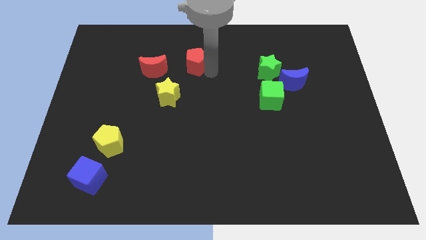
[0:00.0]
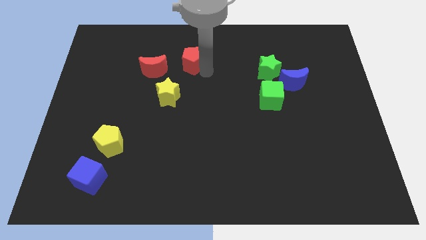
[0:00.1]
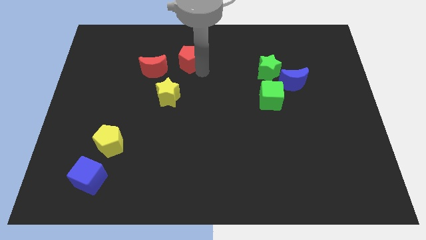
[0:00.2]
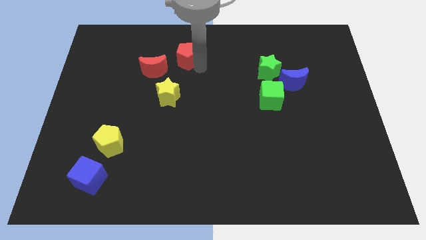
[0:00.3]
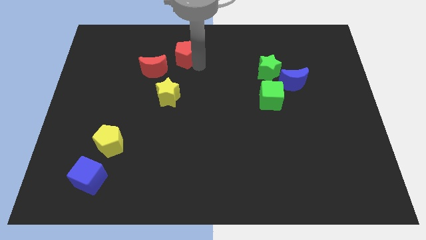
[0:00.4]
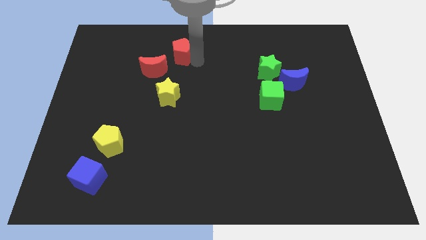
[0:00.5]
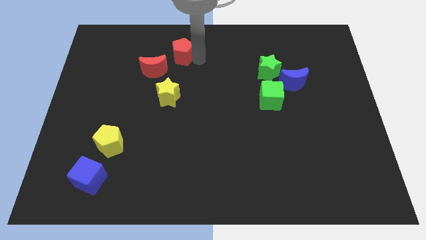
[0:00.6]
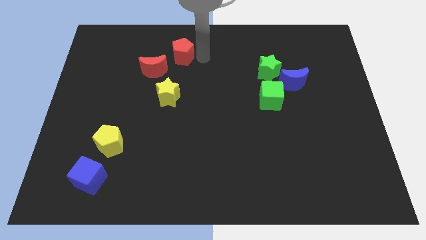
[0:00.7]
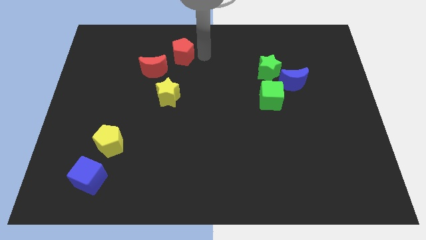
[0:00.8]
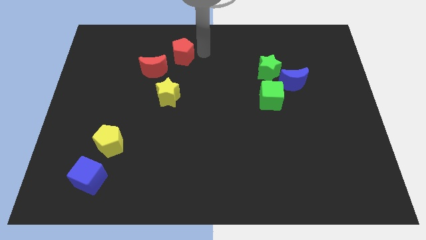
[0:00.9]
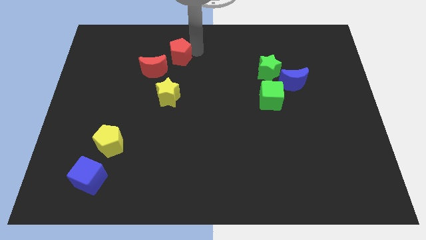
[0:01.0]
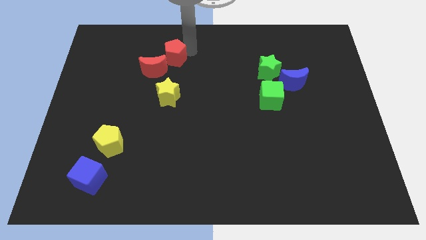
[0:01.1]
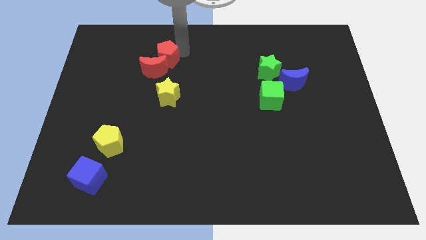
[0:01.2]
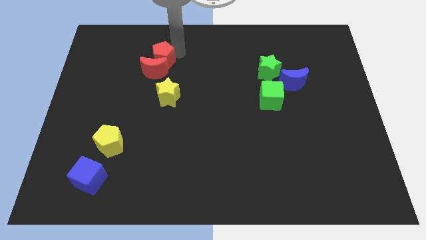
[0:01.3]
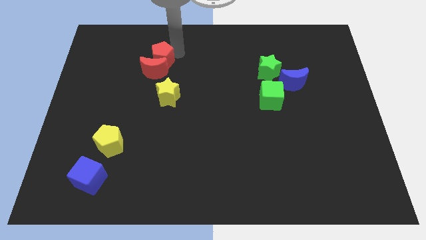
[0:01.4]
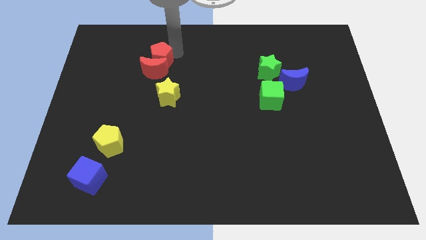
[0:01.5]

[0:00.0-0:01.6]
move the red pentagon into the red moon

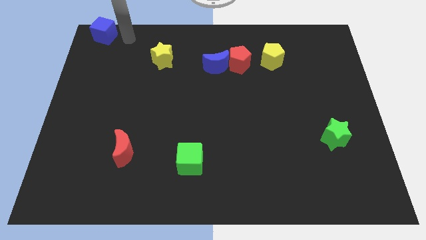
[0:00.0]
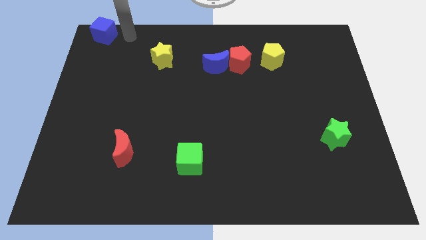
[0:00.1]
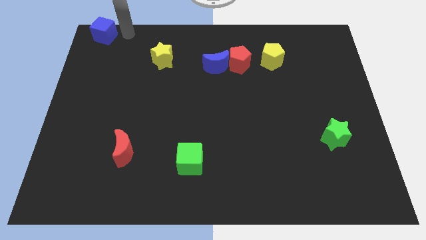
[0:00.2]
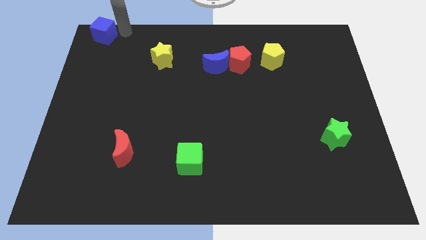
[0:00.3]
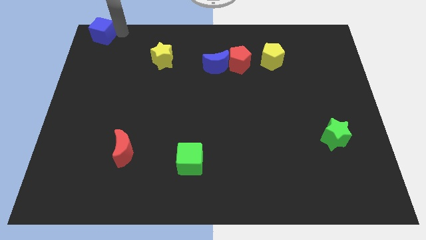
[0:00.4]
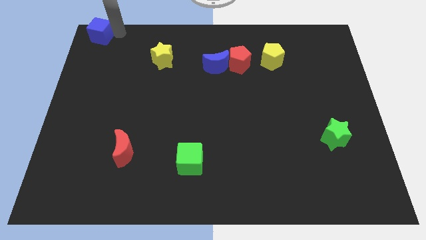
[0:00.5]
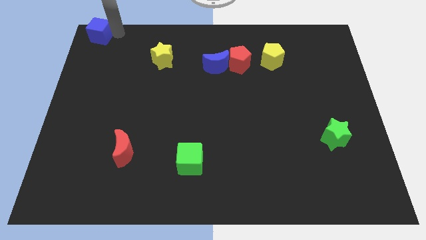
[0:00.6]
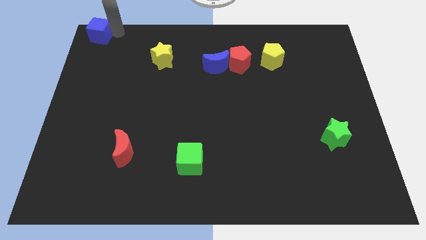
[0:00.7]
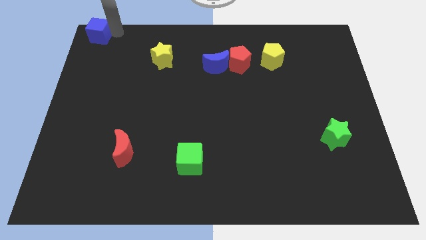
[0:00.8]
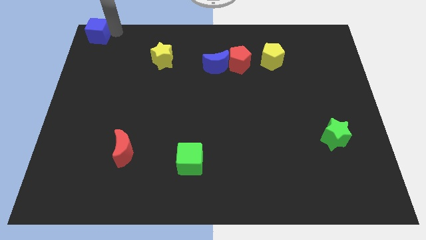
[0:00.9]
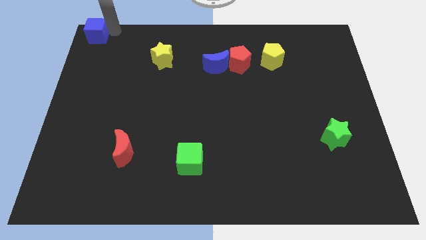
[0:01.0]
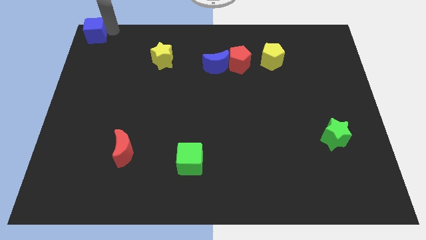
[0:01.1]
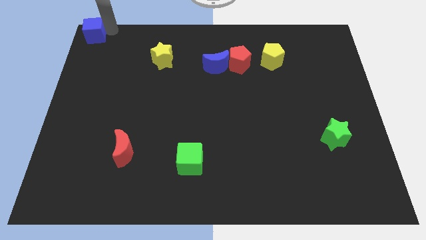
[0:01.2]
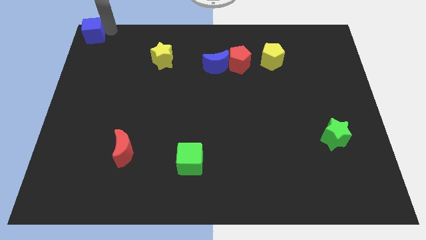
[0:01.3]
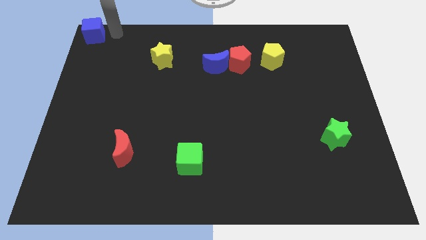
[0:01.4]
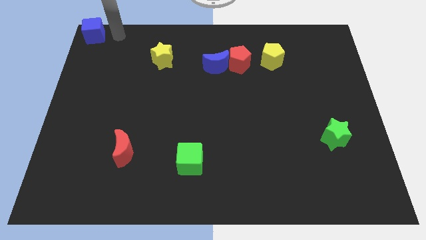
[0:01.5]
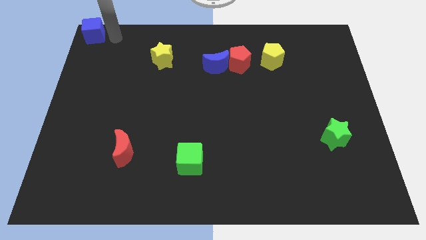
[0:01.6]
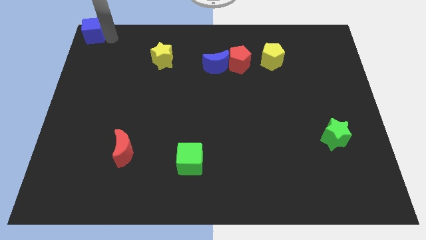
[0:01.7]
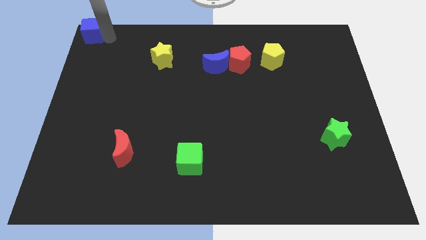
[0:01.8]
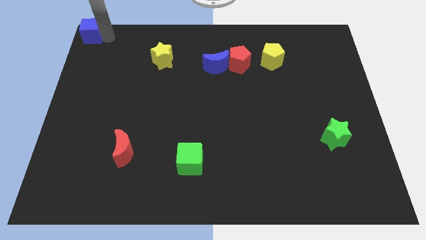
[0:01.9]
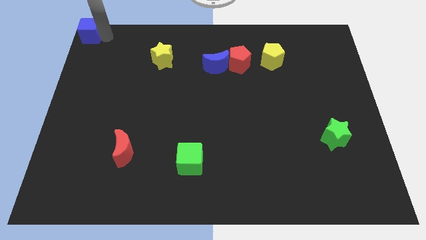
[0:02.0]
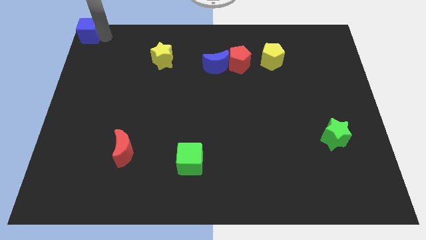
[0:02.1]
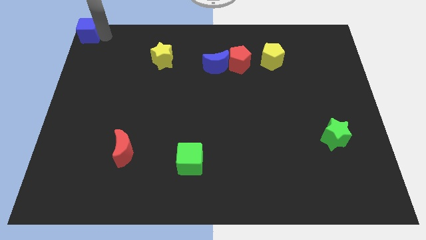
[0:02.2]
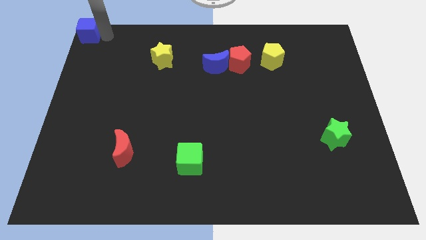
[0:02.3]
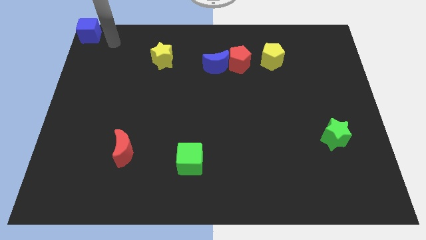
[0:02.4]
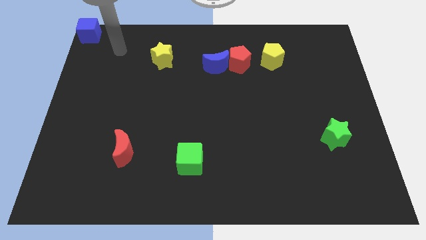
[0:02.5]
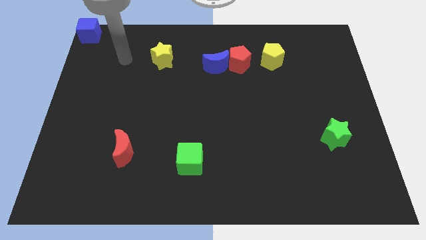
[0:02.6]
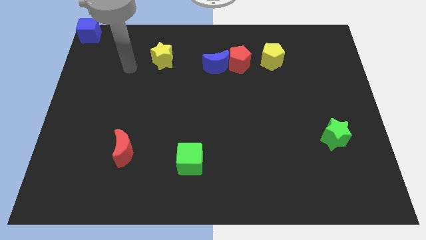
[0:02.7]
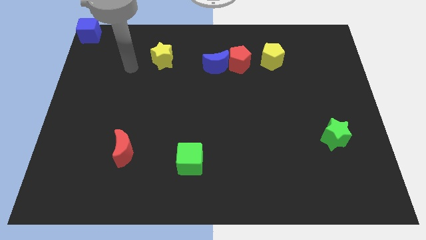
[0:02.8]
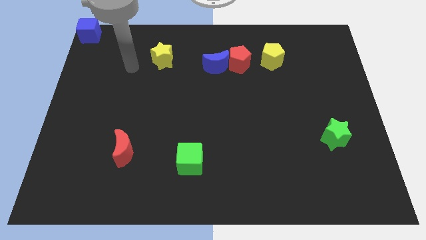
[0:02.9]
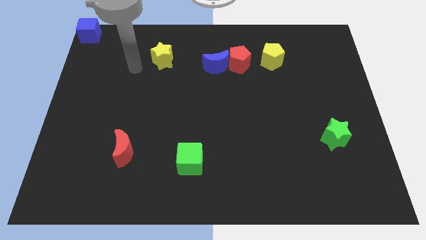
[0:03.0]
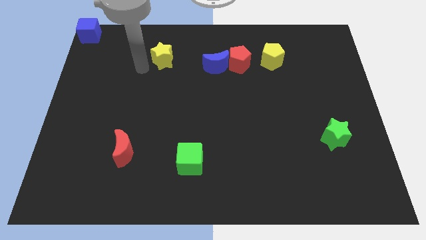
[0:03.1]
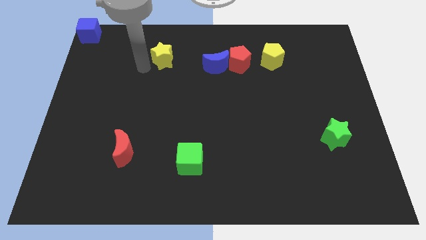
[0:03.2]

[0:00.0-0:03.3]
place blue block exactly at the top left corner of the board

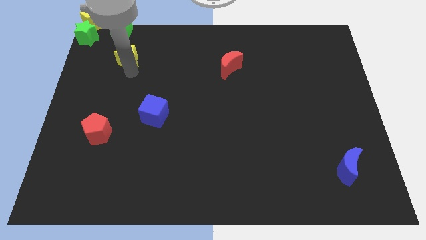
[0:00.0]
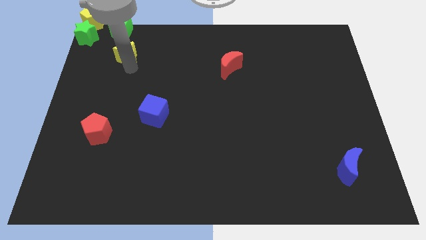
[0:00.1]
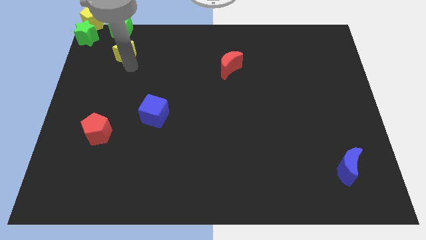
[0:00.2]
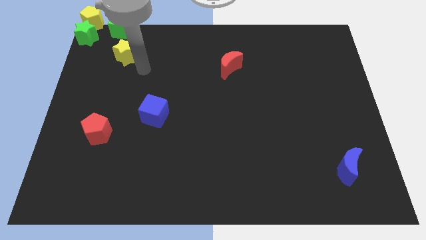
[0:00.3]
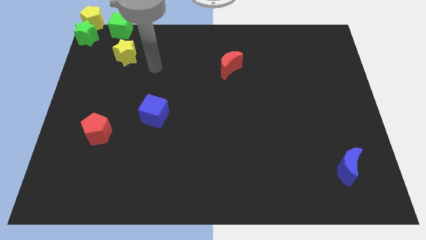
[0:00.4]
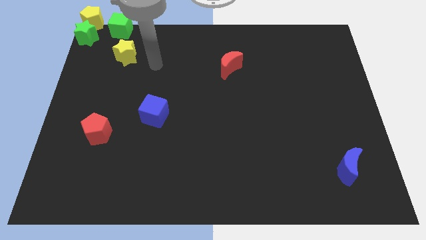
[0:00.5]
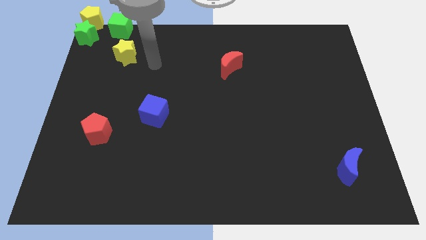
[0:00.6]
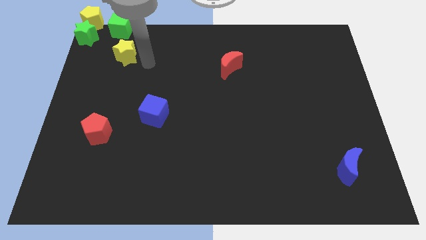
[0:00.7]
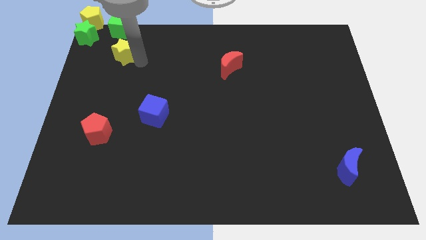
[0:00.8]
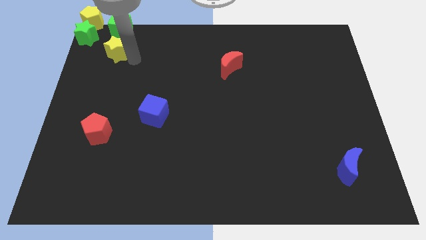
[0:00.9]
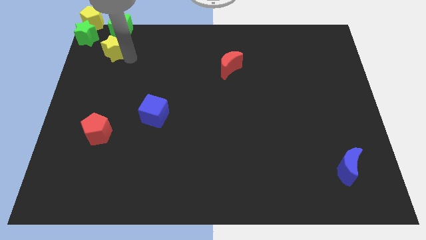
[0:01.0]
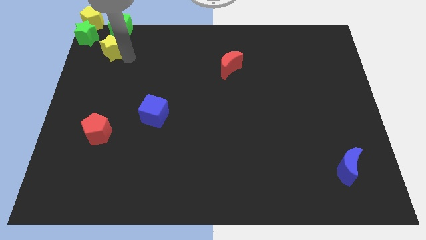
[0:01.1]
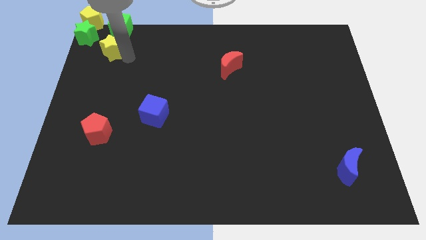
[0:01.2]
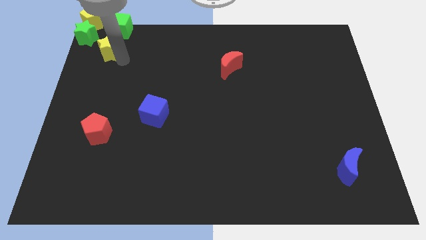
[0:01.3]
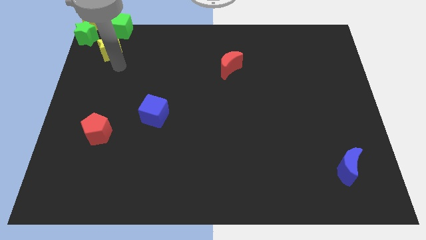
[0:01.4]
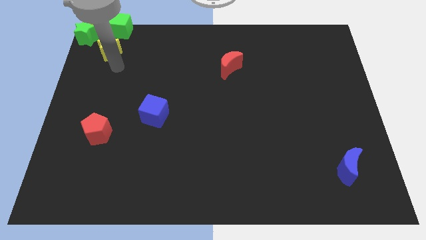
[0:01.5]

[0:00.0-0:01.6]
push the yellow star towards green star

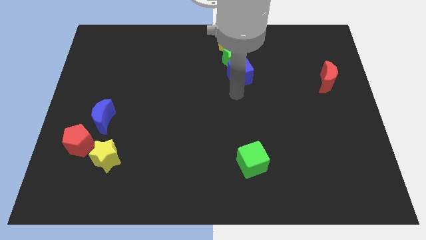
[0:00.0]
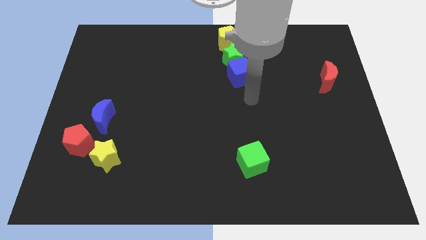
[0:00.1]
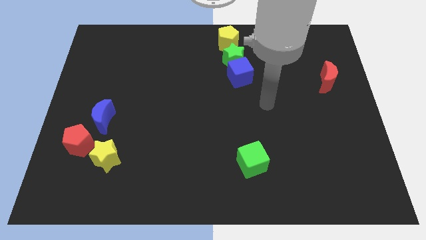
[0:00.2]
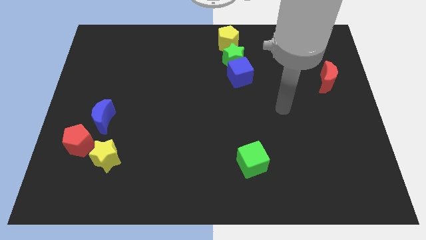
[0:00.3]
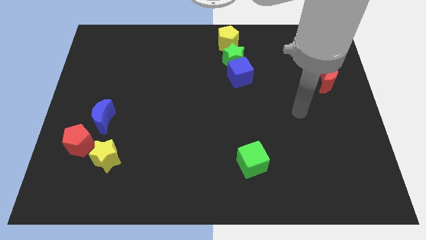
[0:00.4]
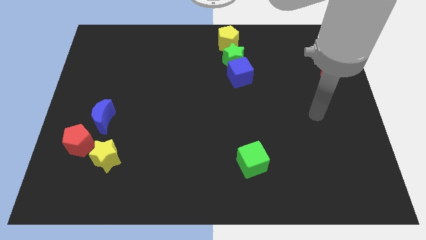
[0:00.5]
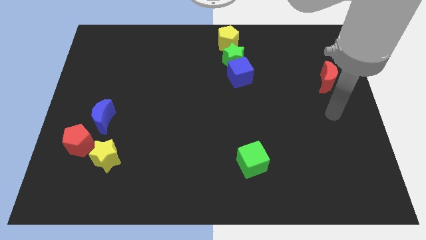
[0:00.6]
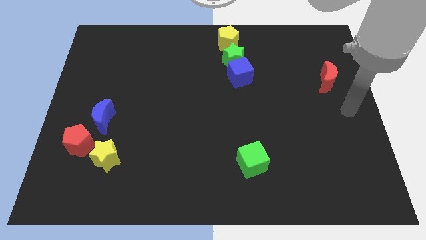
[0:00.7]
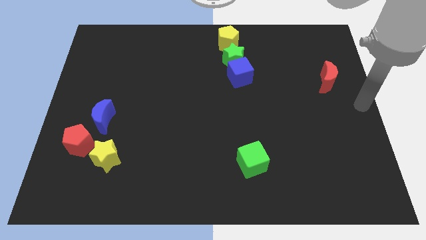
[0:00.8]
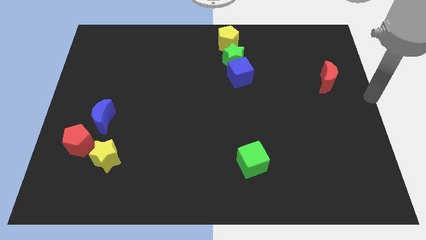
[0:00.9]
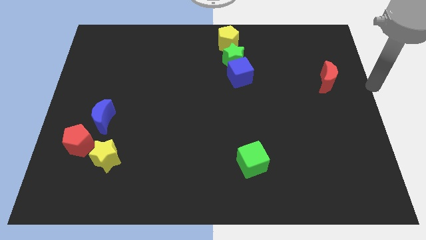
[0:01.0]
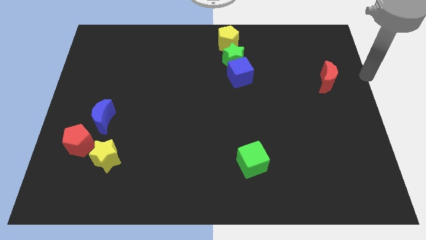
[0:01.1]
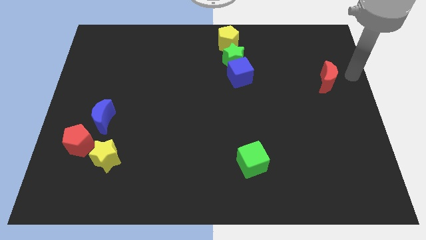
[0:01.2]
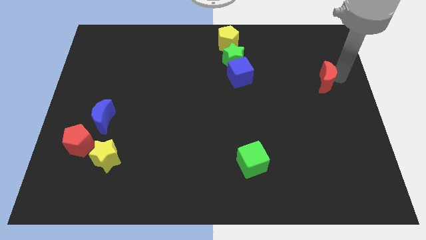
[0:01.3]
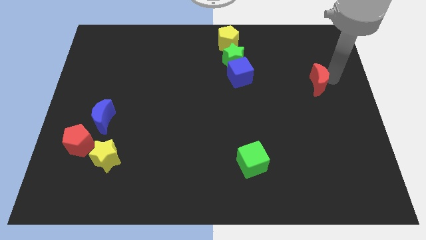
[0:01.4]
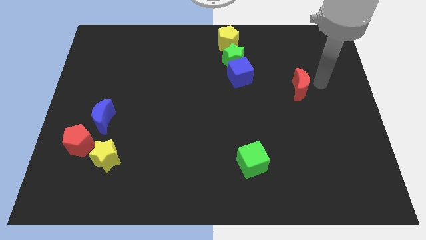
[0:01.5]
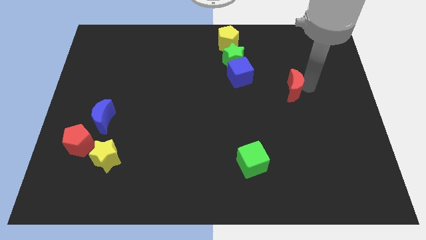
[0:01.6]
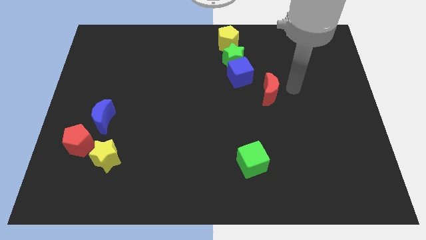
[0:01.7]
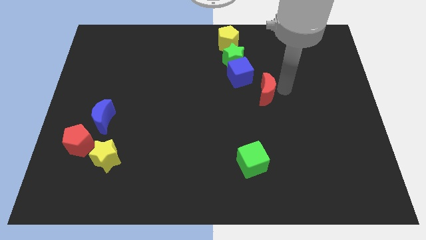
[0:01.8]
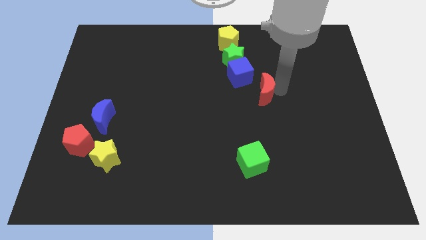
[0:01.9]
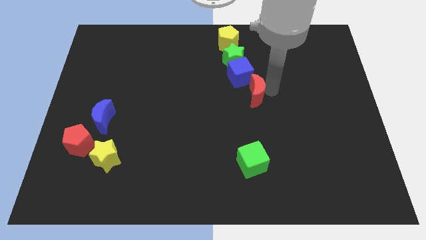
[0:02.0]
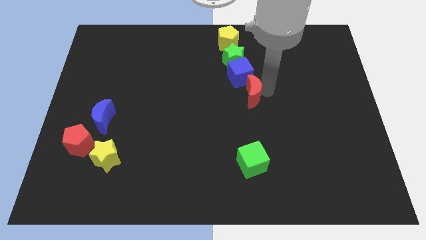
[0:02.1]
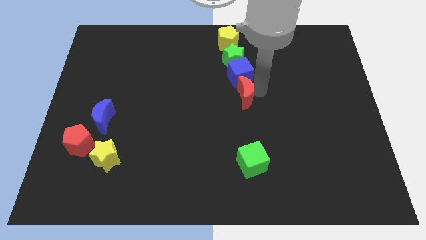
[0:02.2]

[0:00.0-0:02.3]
move the red crescent below blue cube

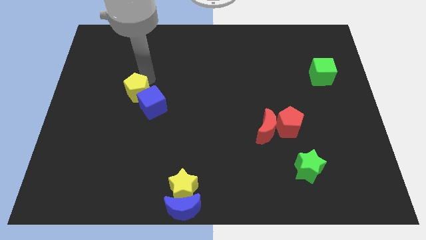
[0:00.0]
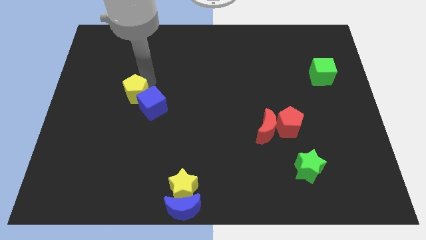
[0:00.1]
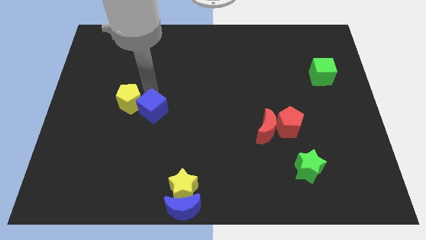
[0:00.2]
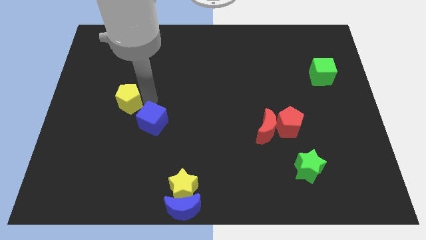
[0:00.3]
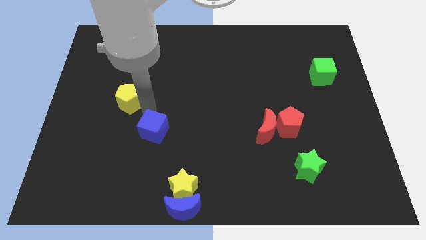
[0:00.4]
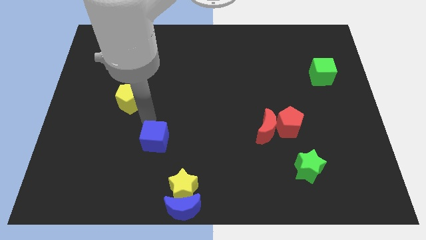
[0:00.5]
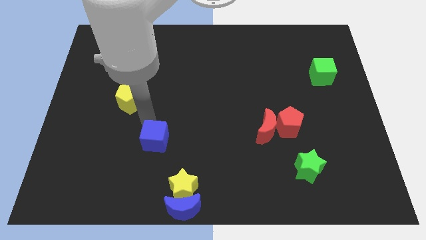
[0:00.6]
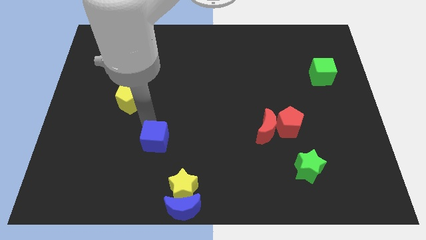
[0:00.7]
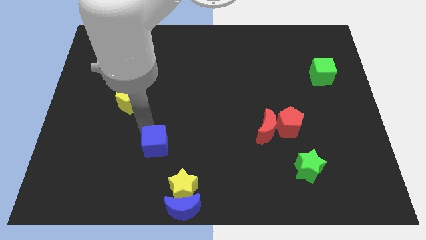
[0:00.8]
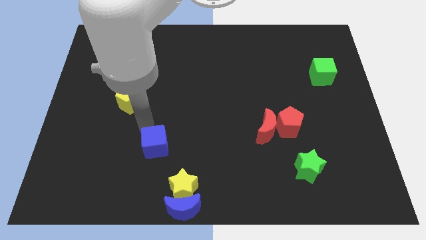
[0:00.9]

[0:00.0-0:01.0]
separate the blue cube from yellow pentagon
